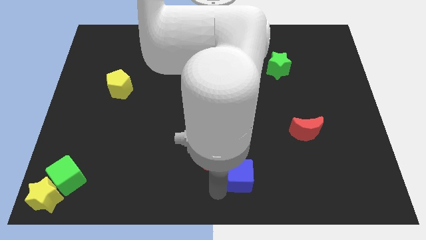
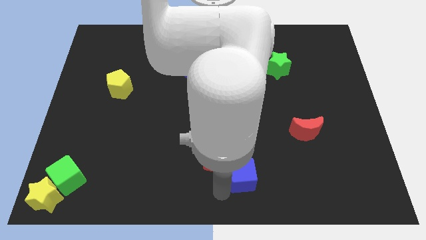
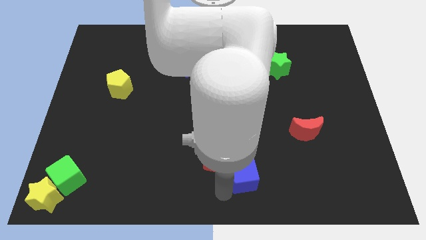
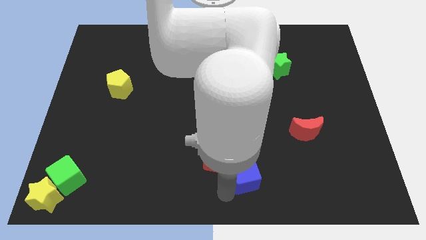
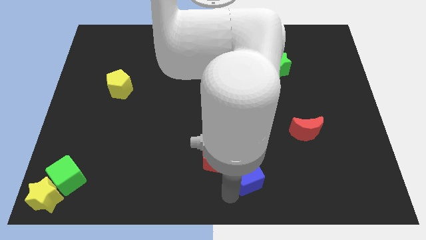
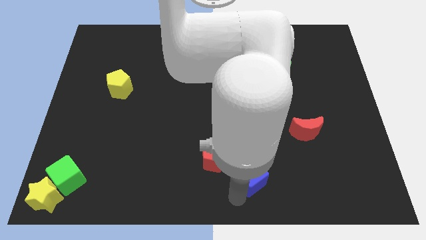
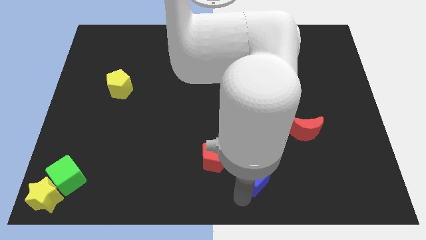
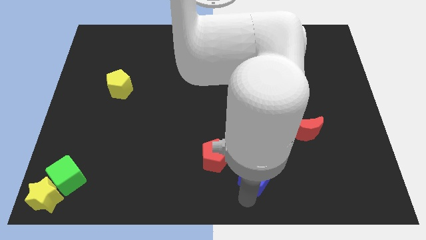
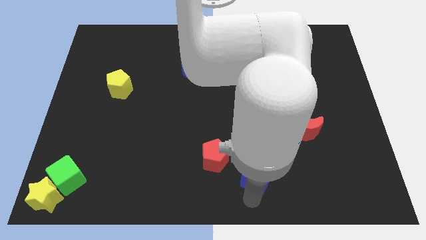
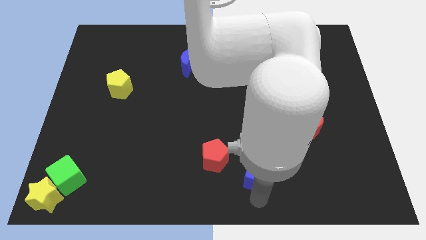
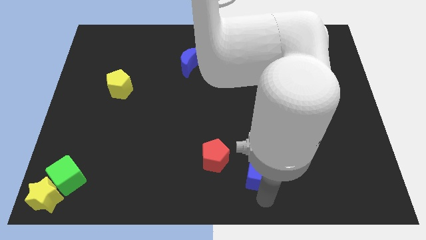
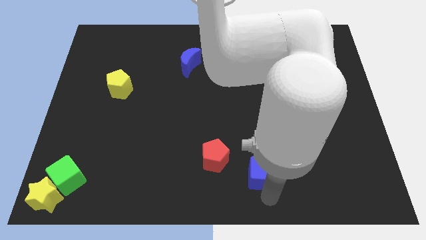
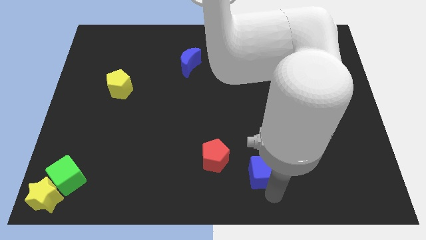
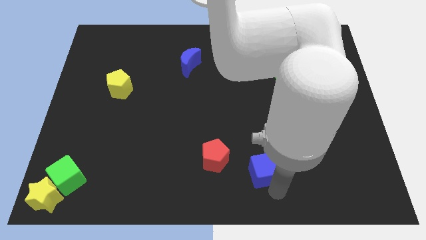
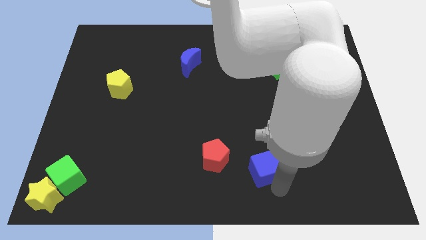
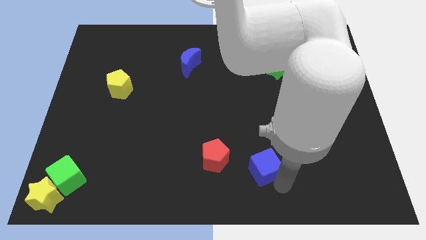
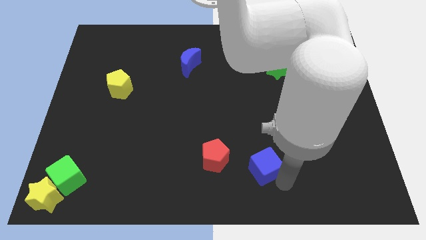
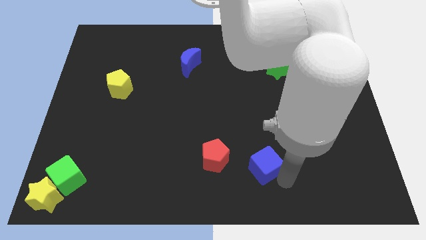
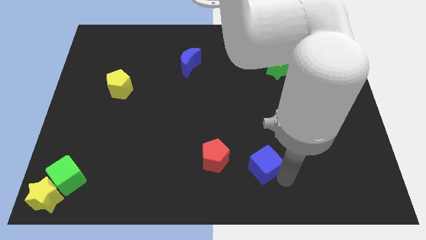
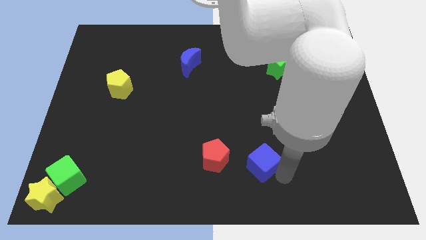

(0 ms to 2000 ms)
move the blue cube parallel to the red pentagon

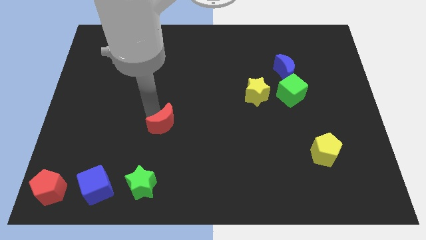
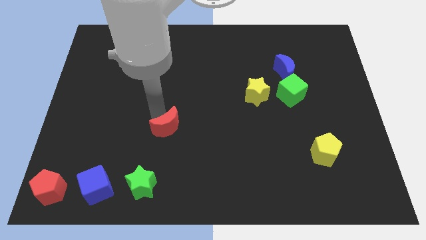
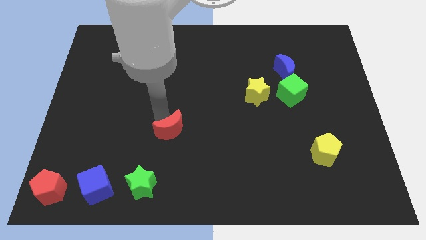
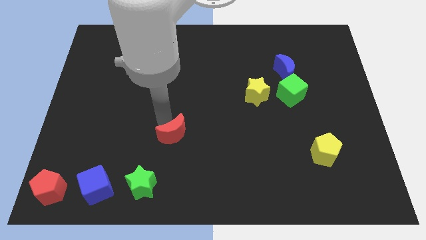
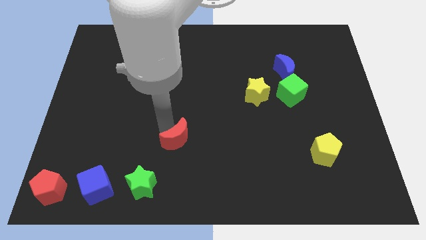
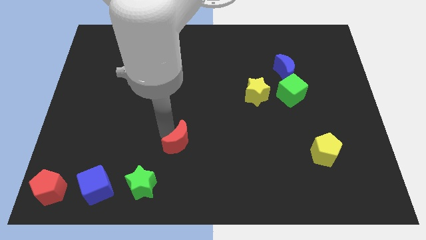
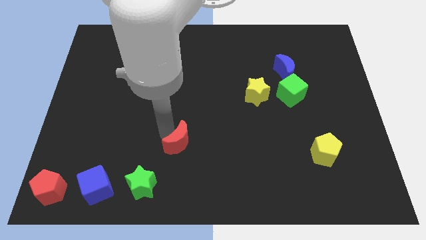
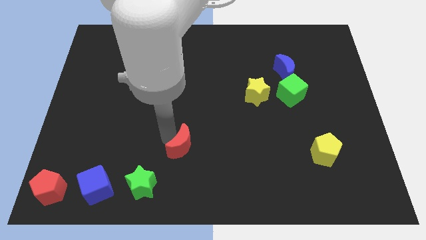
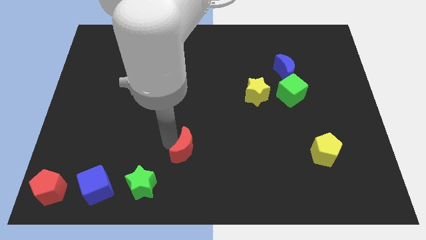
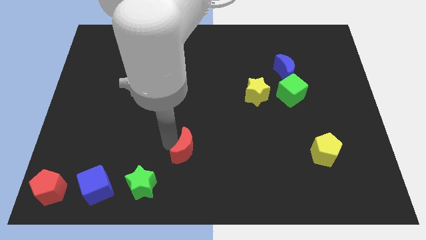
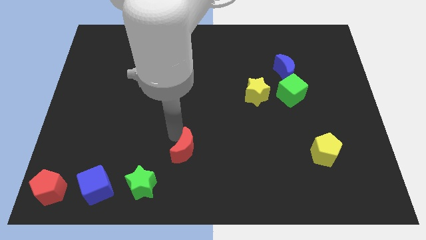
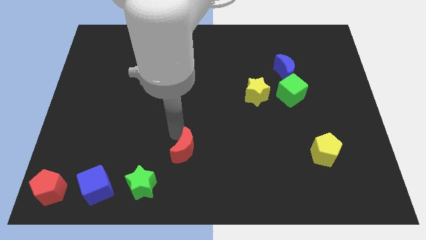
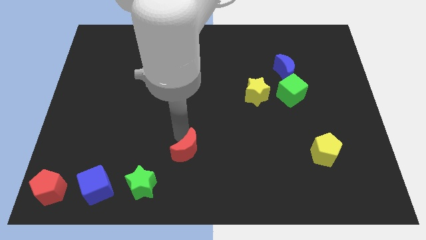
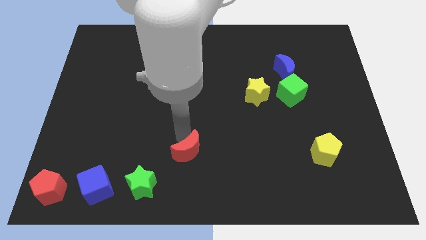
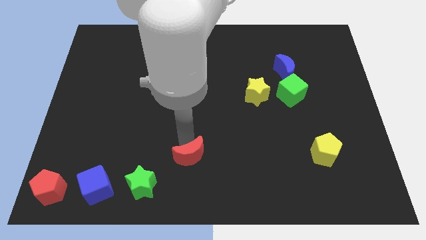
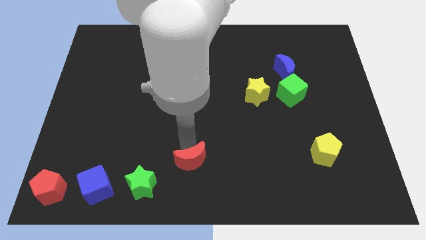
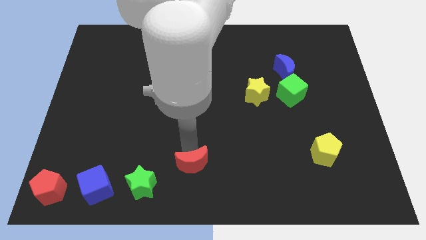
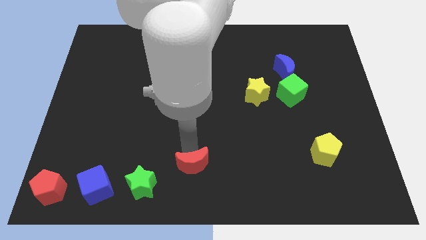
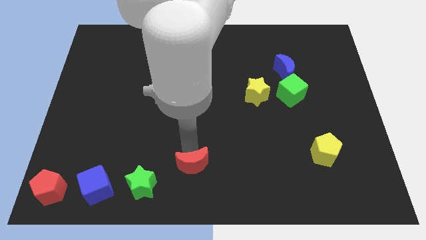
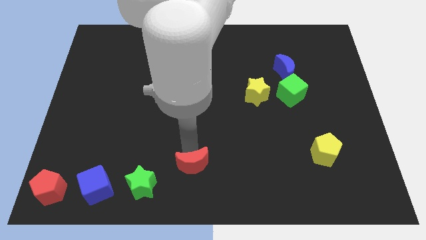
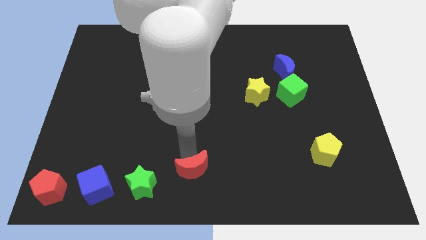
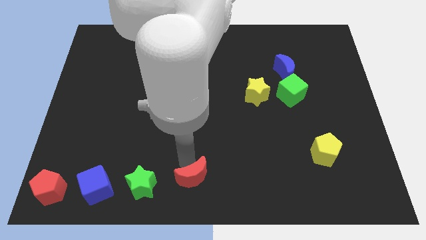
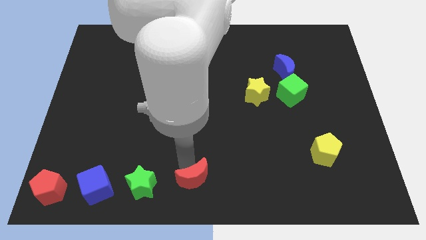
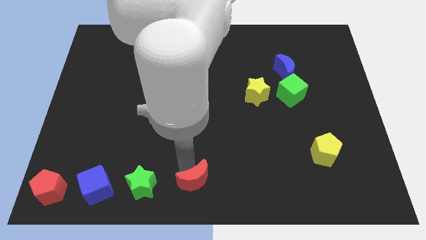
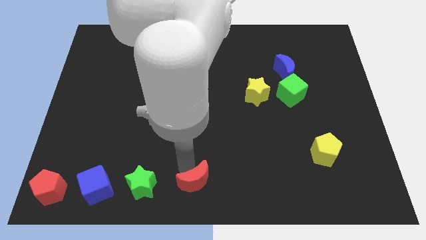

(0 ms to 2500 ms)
move the red moon at the bottom center of the board

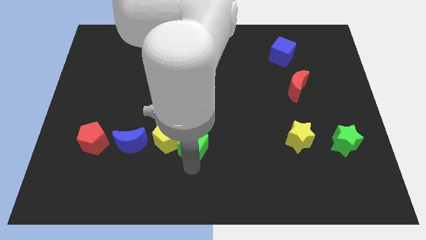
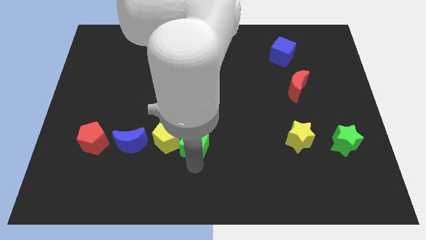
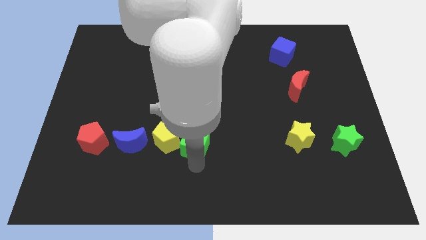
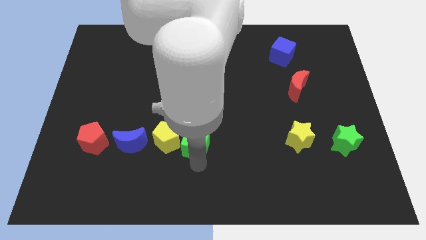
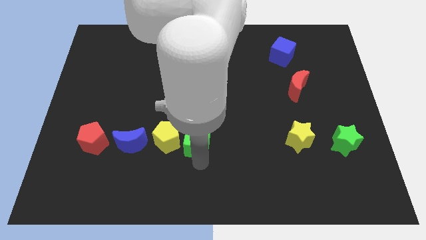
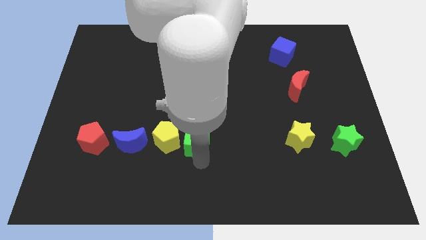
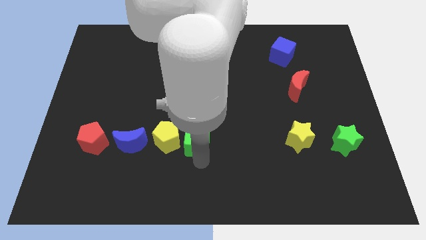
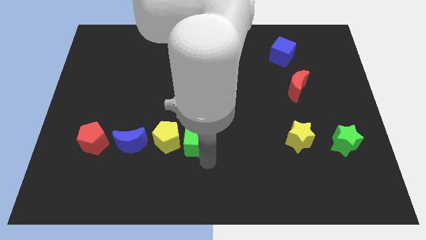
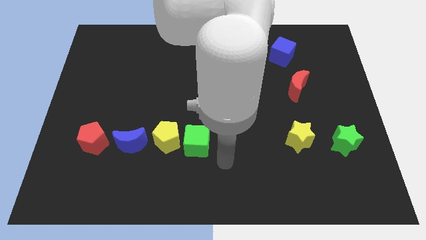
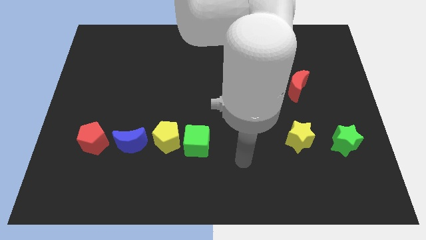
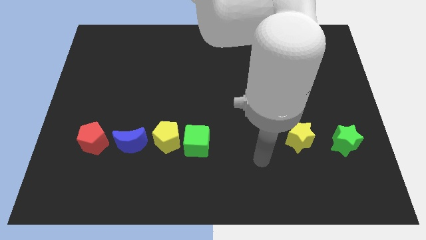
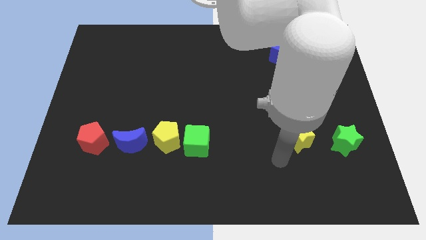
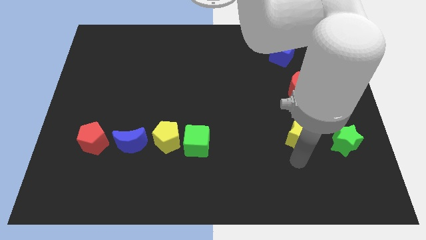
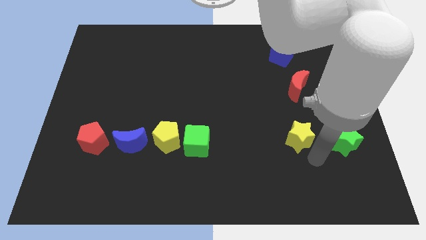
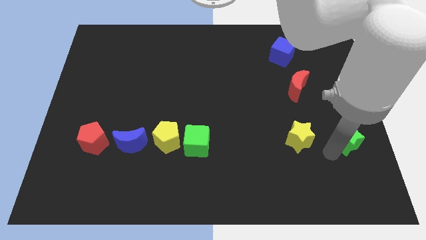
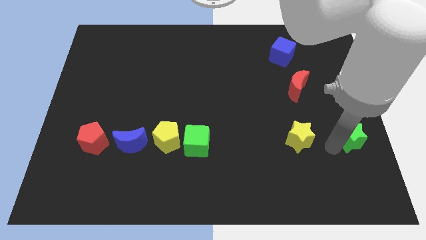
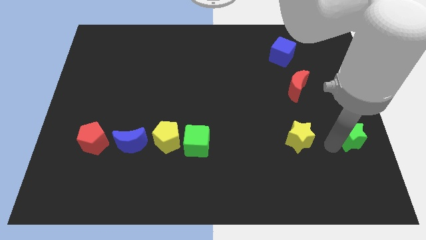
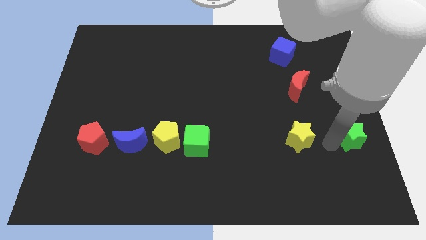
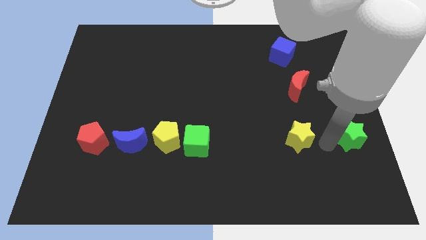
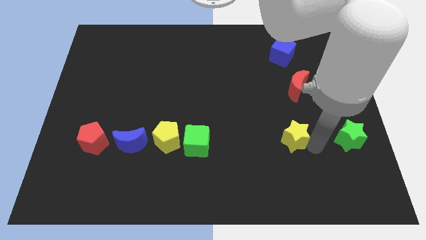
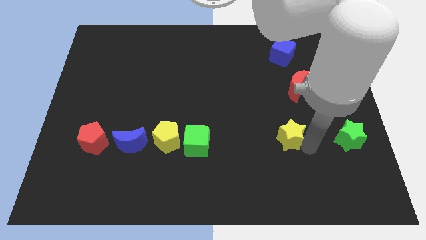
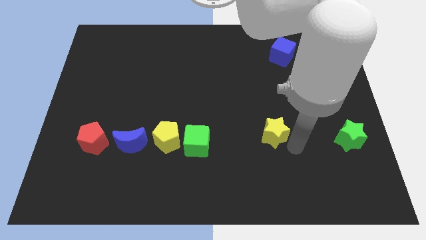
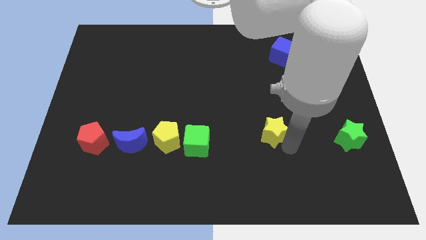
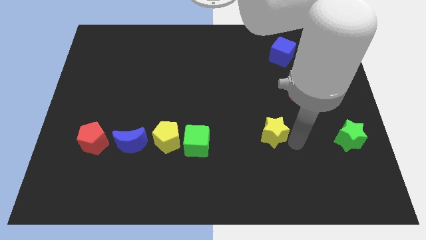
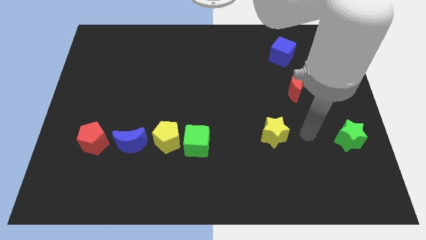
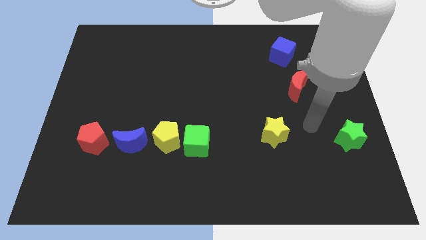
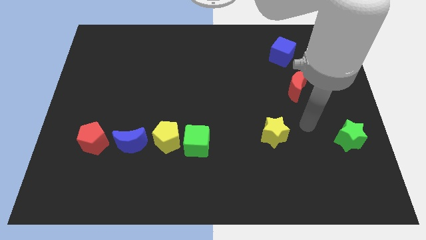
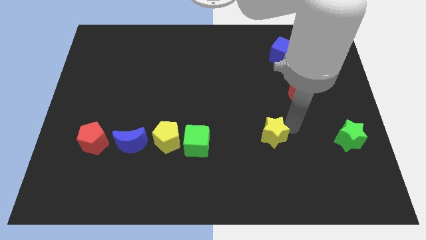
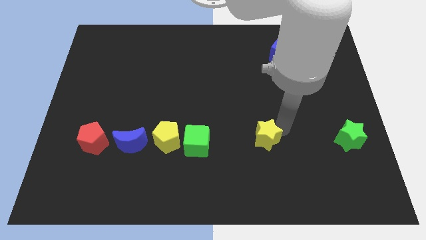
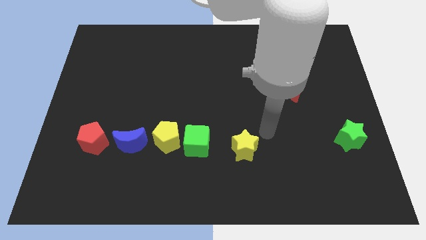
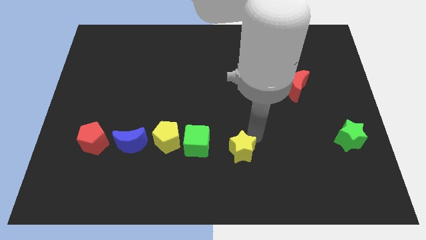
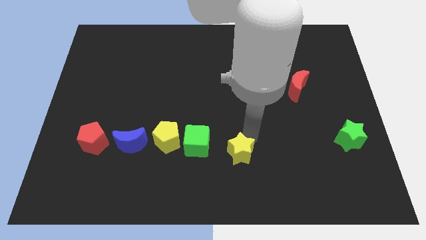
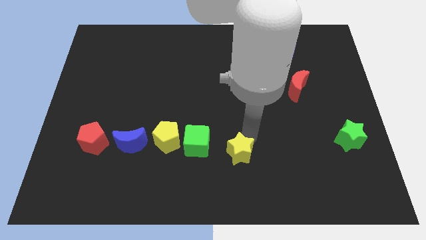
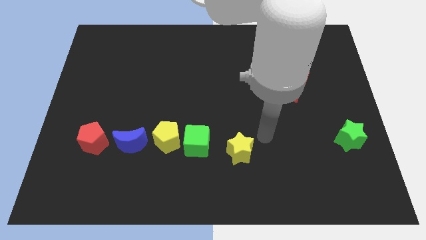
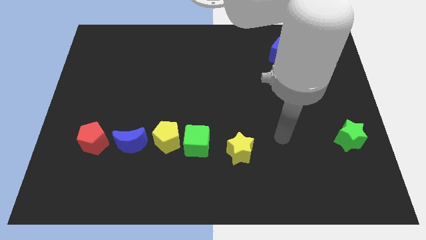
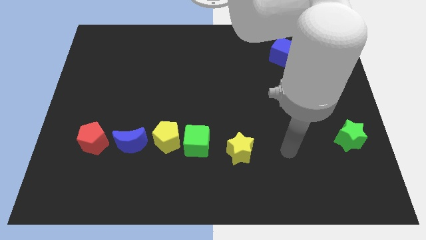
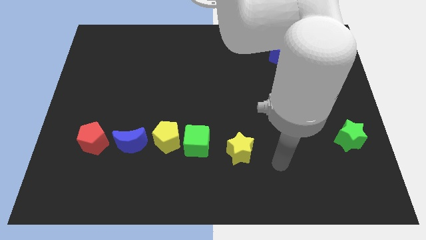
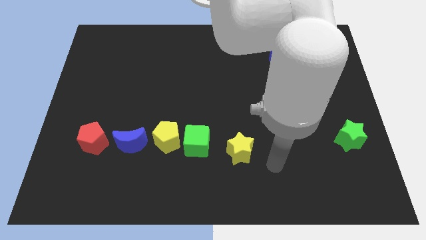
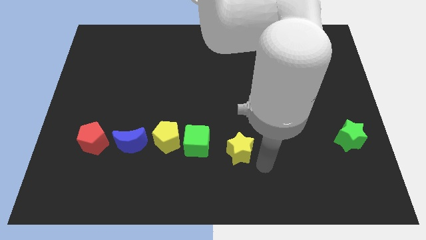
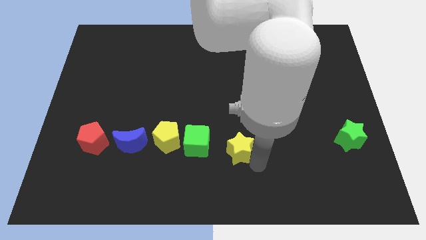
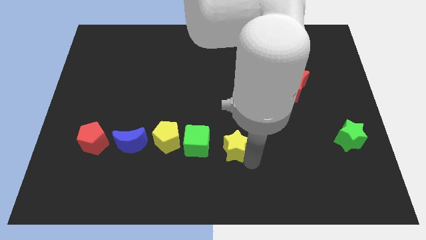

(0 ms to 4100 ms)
place the yellow star to the right of green cube

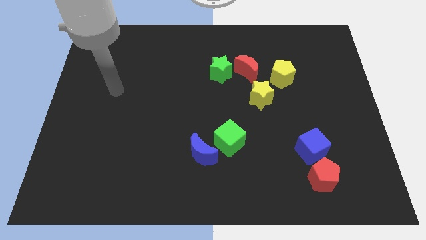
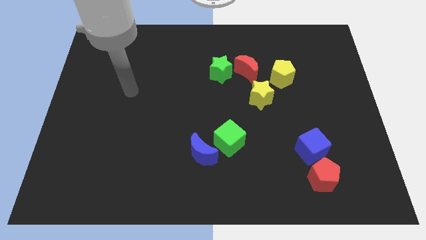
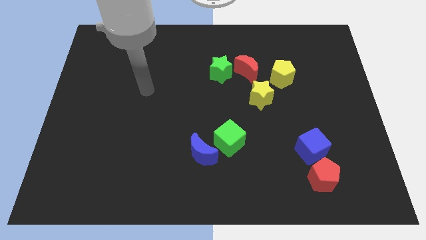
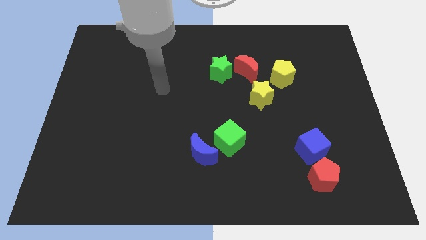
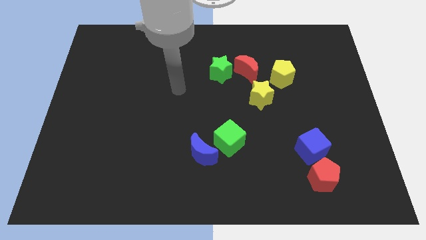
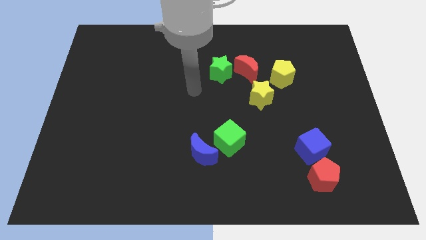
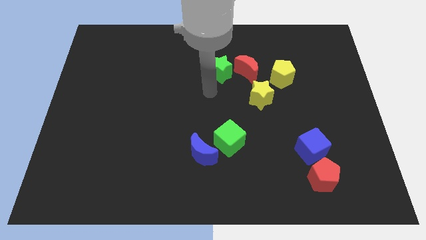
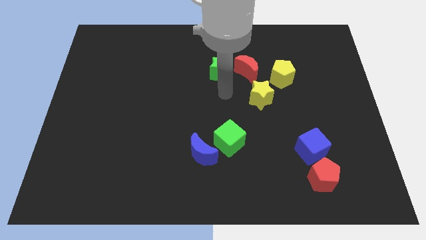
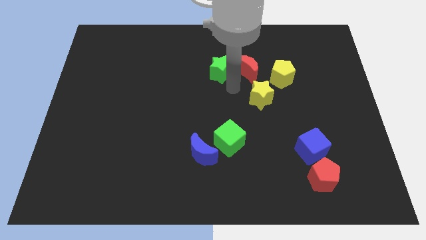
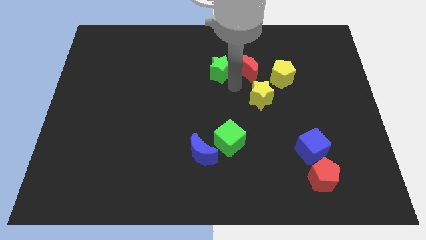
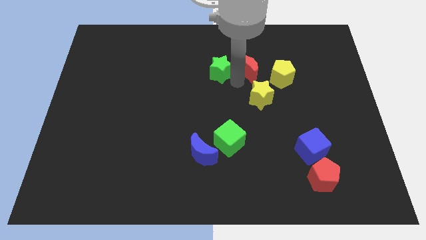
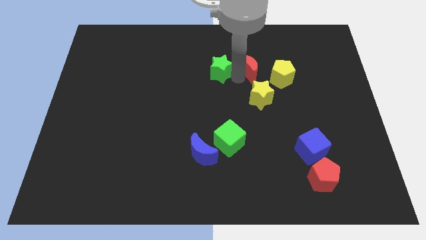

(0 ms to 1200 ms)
place your hand in between the green star and the red moon
